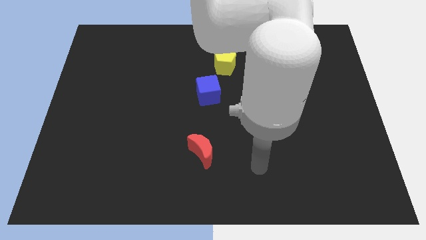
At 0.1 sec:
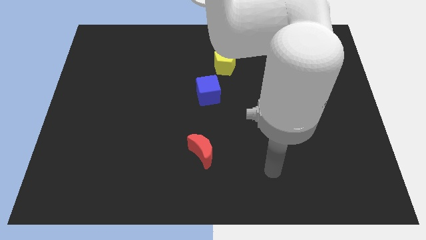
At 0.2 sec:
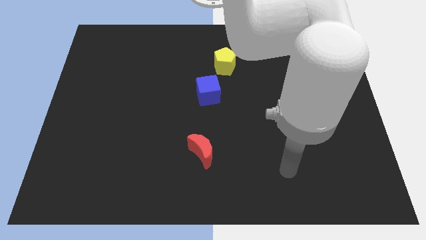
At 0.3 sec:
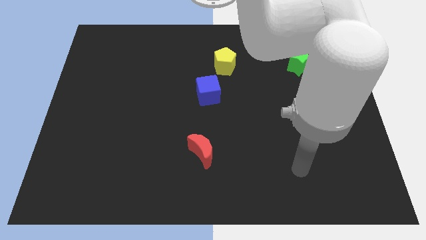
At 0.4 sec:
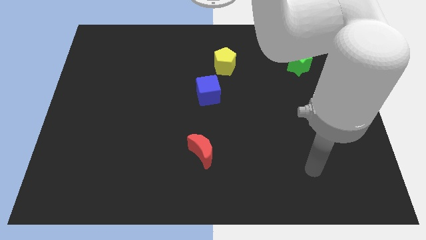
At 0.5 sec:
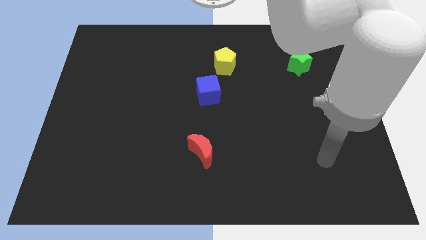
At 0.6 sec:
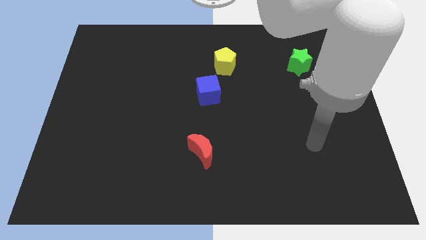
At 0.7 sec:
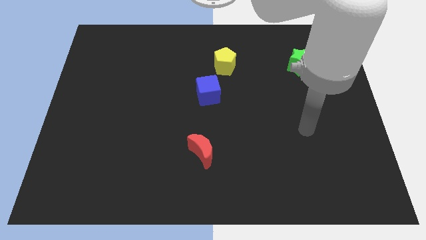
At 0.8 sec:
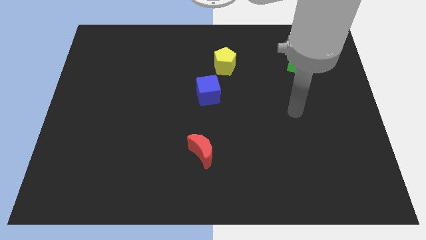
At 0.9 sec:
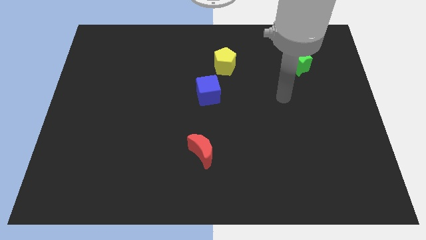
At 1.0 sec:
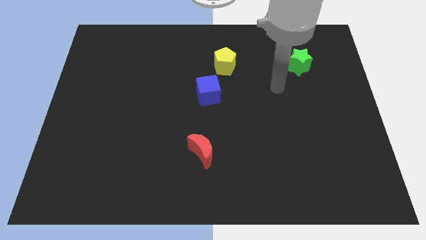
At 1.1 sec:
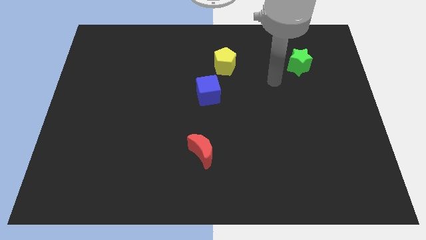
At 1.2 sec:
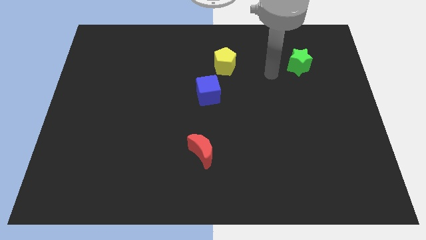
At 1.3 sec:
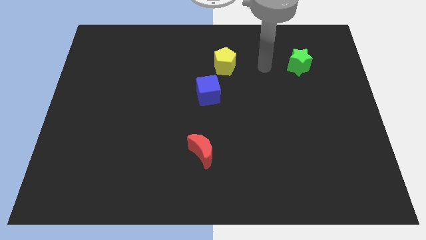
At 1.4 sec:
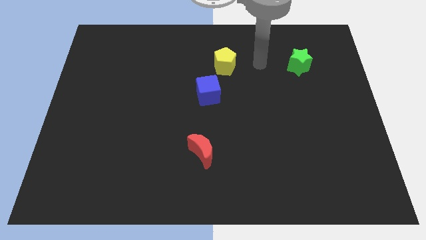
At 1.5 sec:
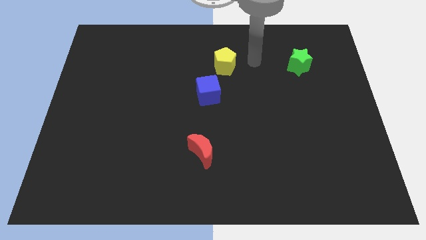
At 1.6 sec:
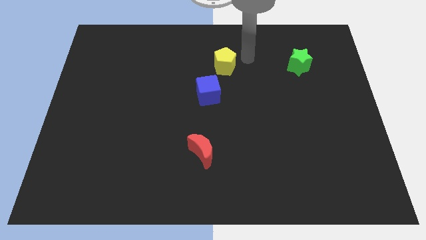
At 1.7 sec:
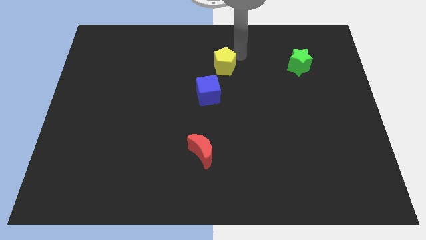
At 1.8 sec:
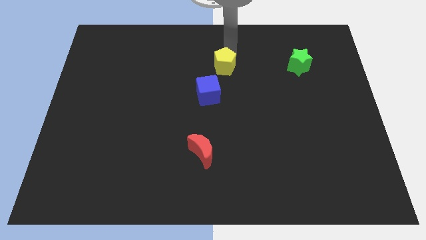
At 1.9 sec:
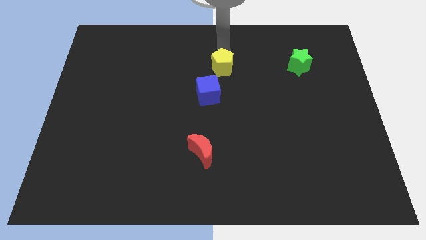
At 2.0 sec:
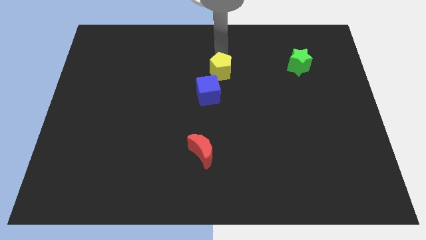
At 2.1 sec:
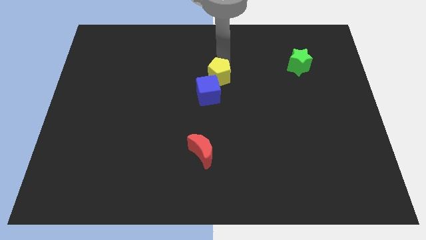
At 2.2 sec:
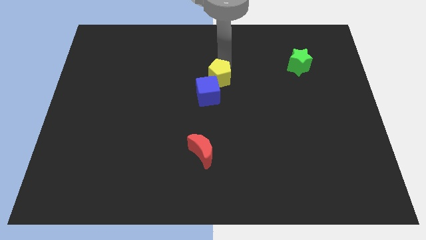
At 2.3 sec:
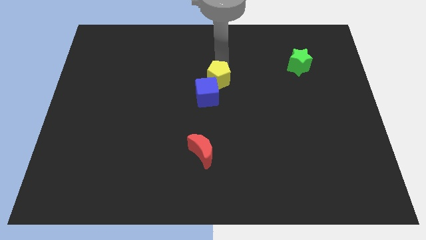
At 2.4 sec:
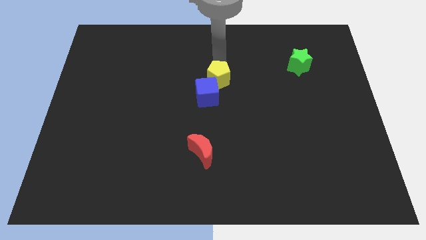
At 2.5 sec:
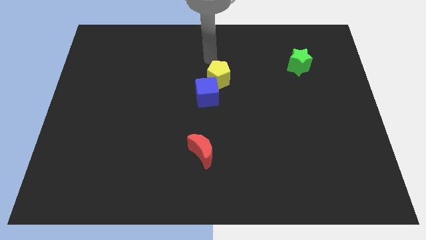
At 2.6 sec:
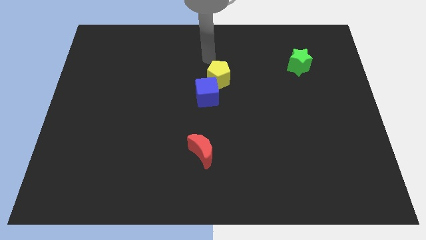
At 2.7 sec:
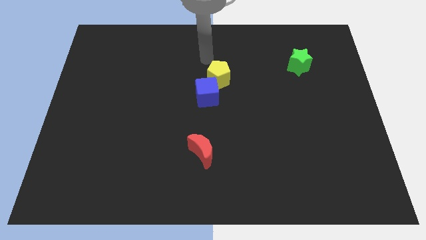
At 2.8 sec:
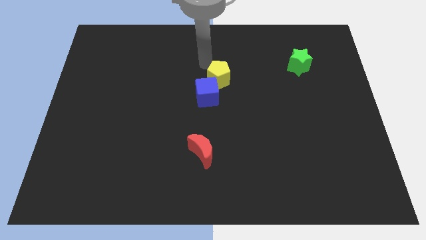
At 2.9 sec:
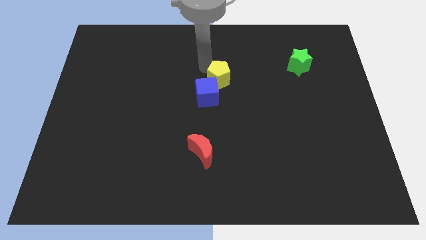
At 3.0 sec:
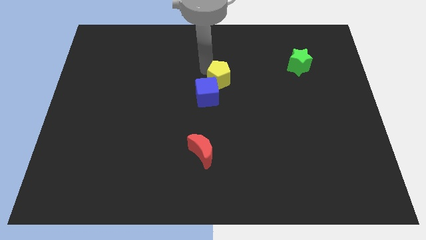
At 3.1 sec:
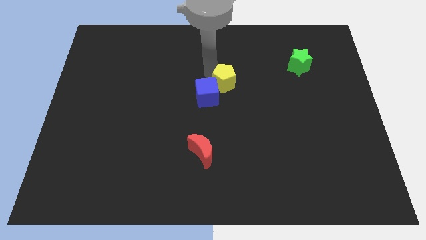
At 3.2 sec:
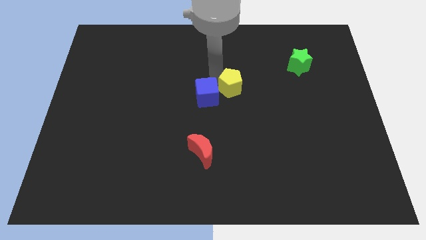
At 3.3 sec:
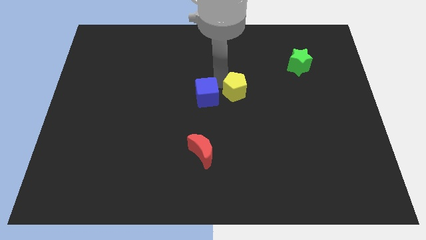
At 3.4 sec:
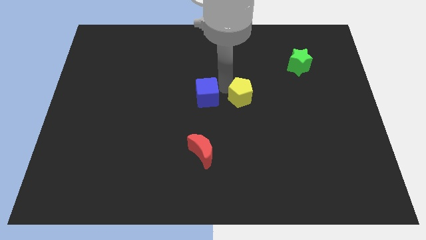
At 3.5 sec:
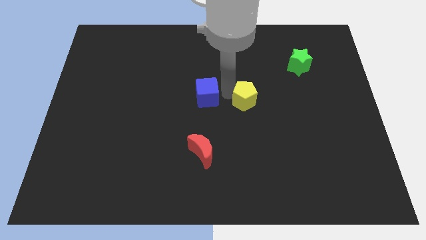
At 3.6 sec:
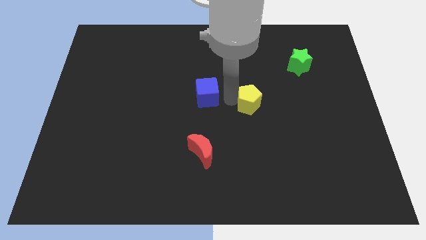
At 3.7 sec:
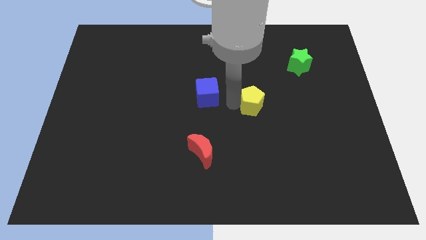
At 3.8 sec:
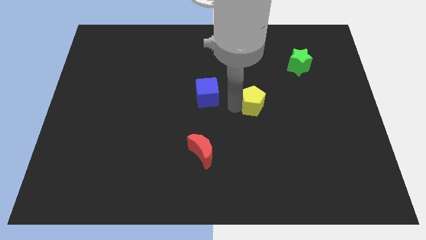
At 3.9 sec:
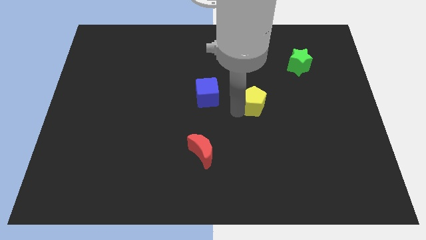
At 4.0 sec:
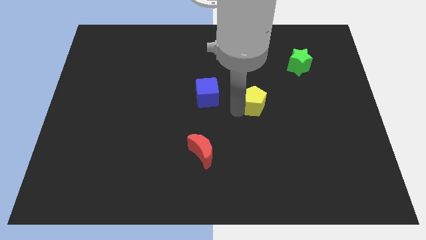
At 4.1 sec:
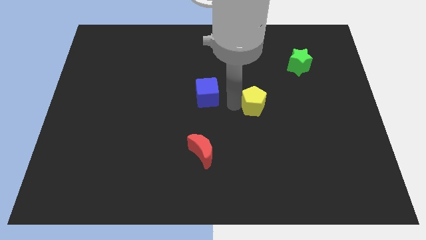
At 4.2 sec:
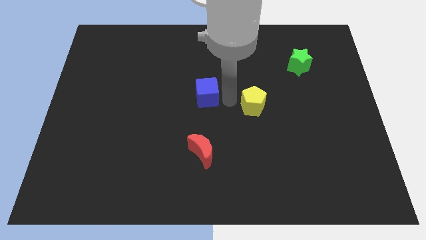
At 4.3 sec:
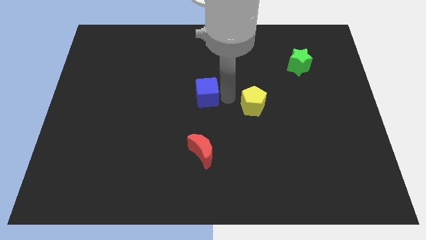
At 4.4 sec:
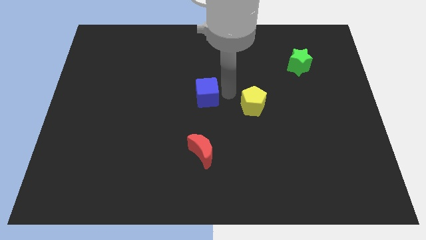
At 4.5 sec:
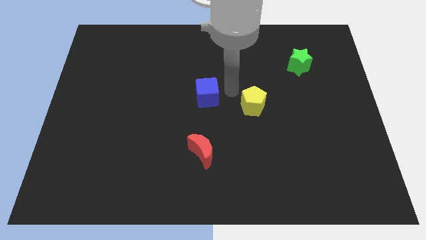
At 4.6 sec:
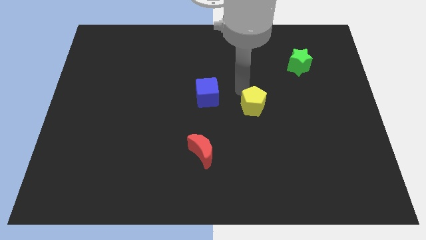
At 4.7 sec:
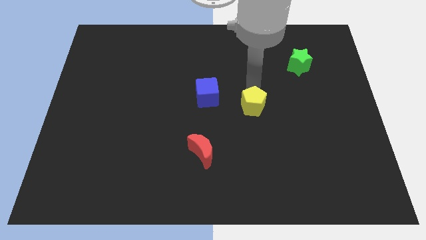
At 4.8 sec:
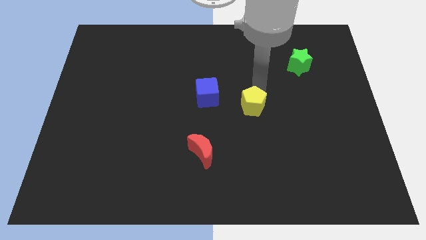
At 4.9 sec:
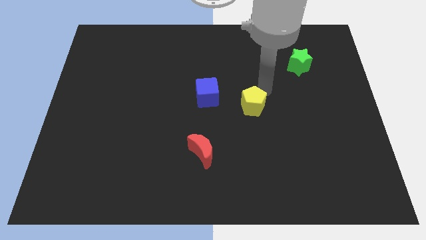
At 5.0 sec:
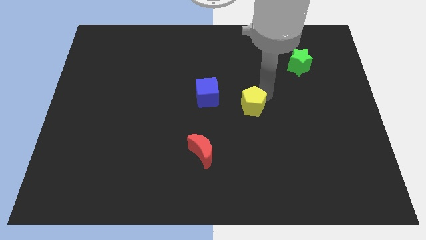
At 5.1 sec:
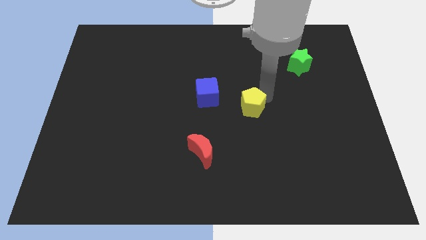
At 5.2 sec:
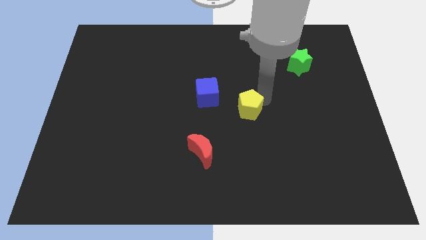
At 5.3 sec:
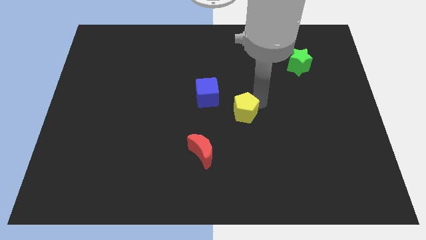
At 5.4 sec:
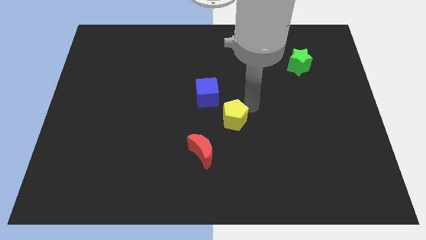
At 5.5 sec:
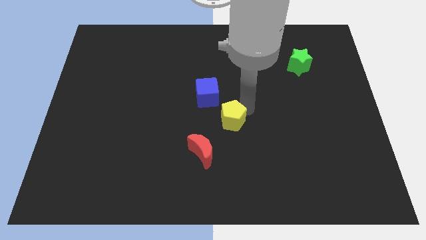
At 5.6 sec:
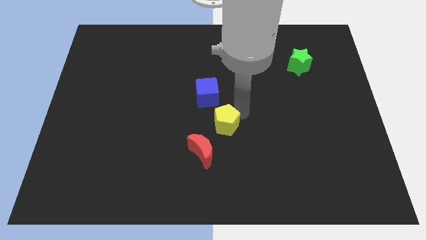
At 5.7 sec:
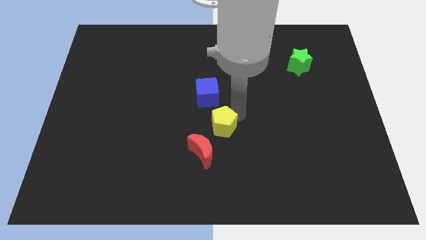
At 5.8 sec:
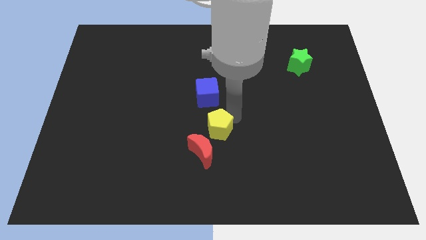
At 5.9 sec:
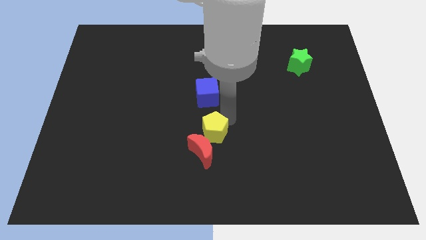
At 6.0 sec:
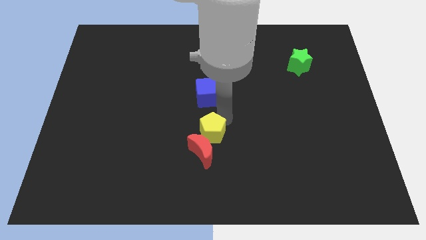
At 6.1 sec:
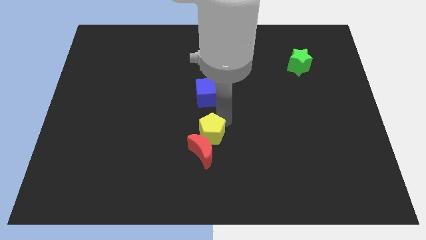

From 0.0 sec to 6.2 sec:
push the pentagon close to the red block

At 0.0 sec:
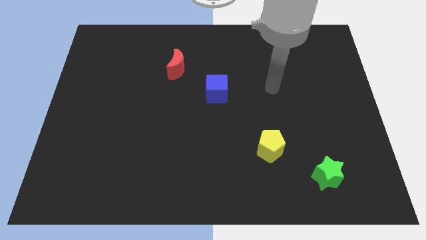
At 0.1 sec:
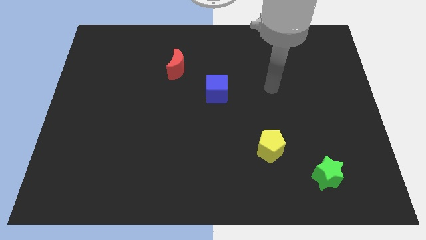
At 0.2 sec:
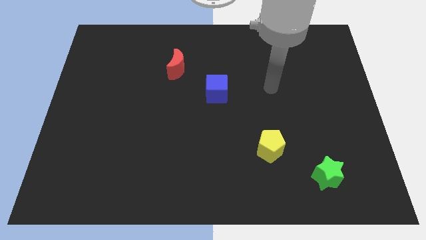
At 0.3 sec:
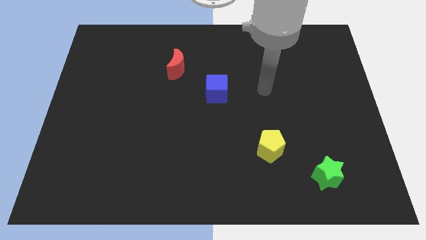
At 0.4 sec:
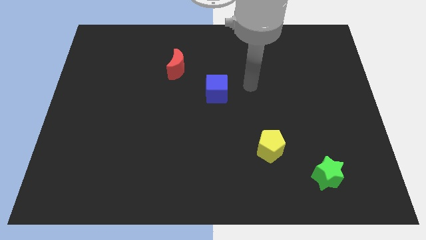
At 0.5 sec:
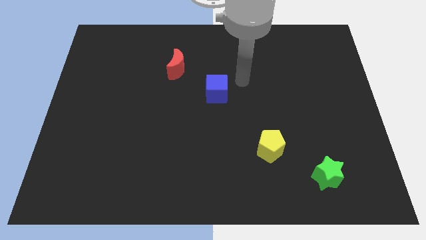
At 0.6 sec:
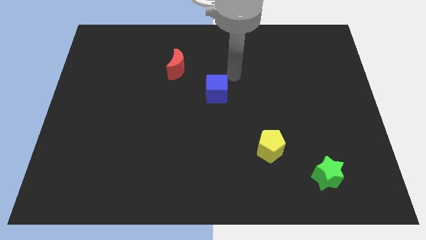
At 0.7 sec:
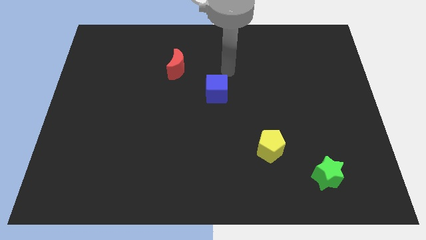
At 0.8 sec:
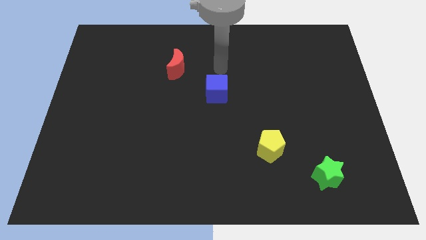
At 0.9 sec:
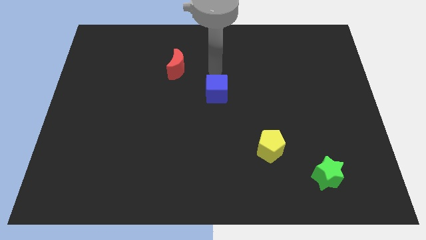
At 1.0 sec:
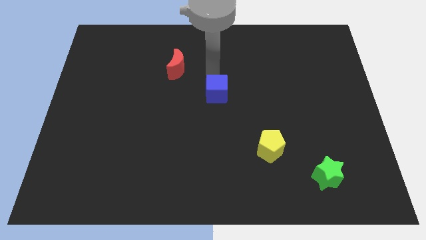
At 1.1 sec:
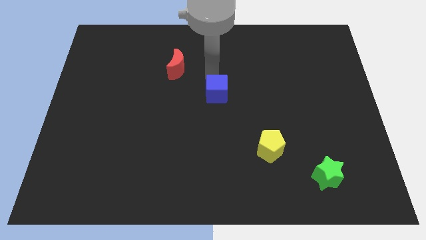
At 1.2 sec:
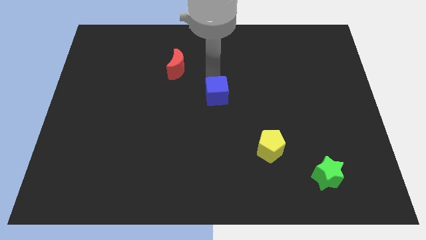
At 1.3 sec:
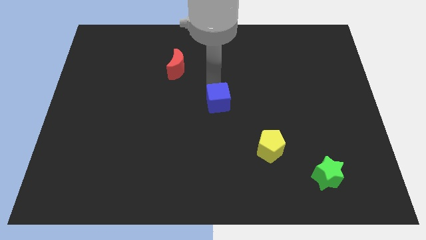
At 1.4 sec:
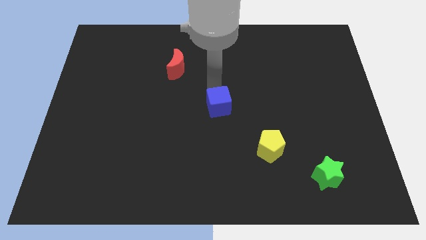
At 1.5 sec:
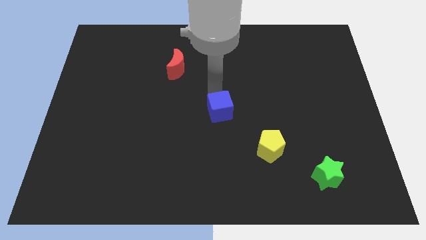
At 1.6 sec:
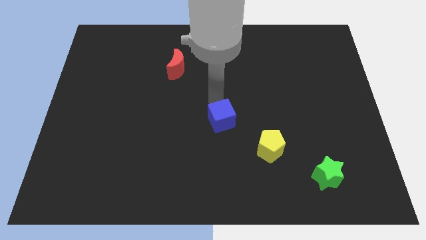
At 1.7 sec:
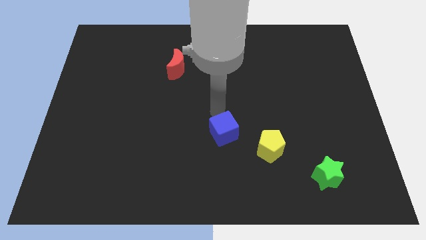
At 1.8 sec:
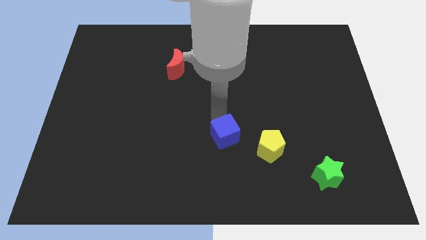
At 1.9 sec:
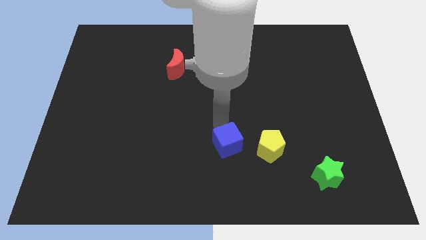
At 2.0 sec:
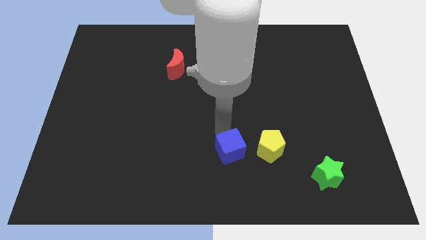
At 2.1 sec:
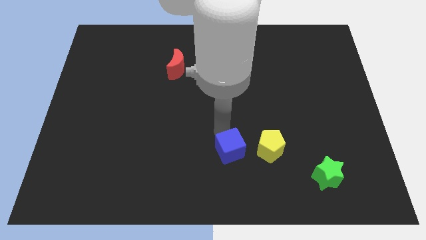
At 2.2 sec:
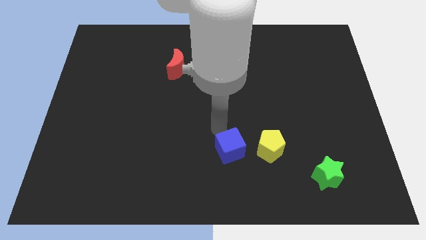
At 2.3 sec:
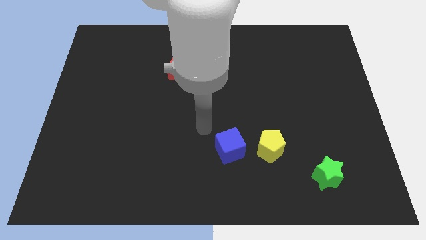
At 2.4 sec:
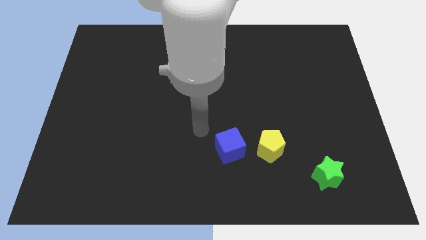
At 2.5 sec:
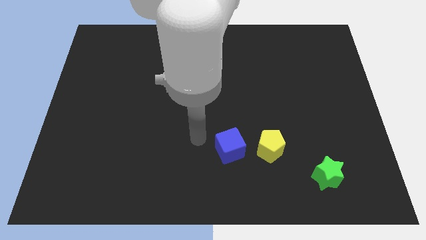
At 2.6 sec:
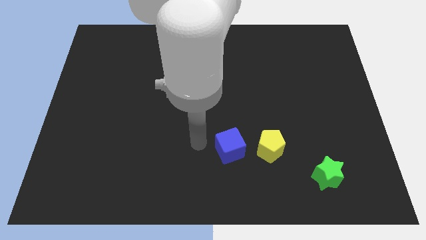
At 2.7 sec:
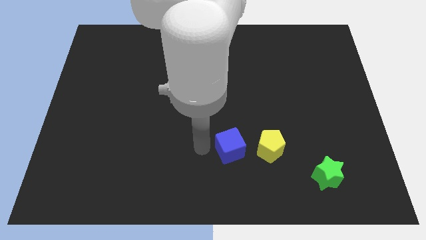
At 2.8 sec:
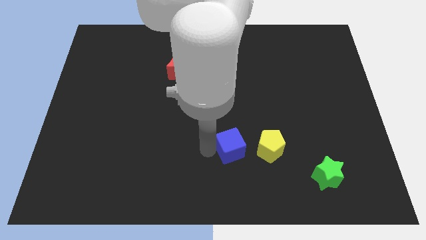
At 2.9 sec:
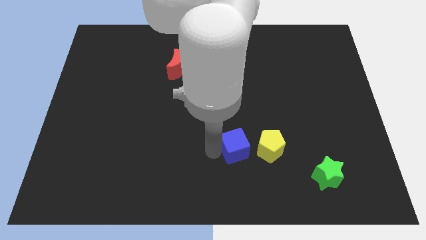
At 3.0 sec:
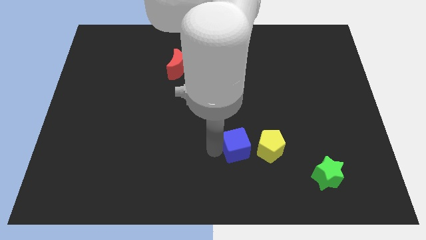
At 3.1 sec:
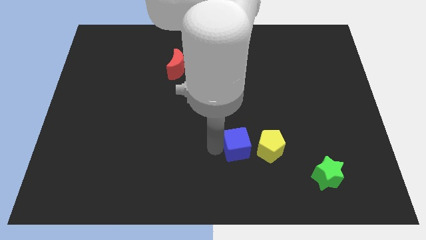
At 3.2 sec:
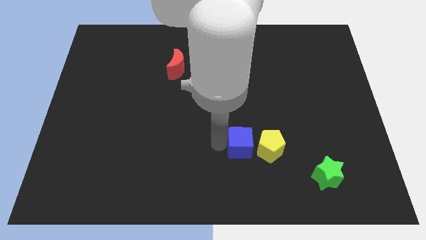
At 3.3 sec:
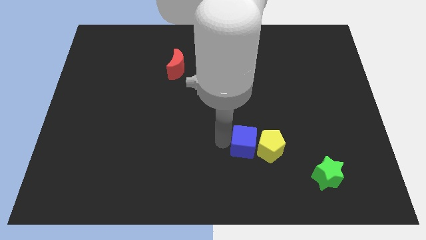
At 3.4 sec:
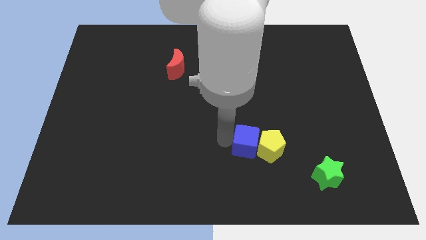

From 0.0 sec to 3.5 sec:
push the blue cube close to the yellow pentagon
